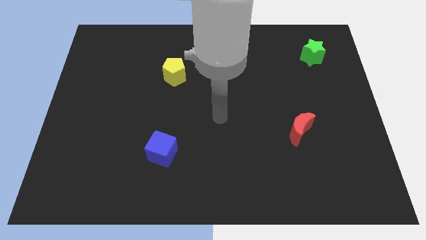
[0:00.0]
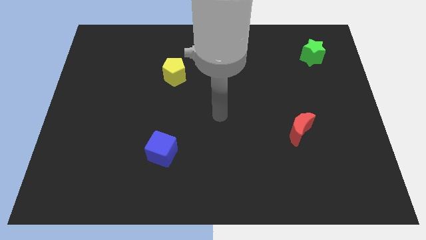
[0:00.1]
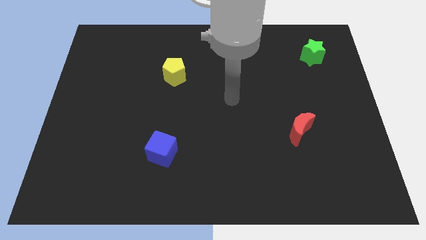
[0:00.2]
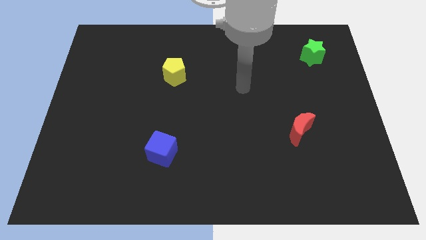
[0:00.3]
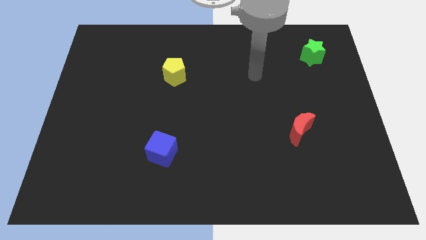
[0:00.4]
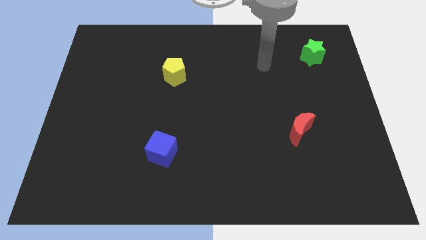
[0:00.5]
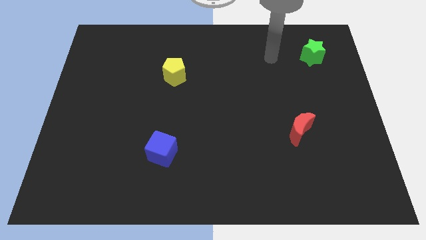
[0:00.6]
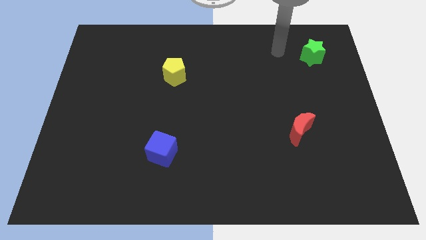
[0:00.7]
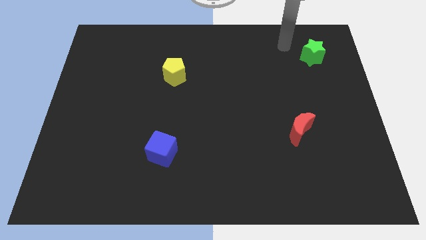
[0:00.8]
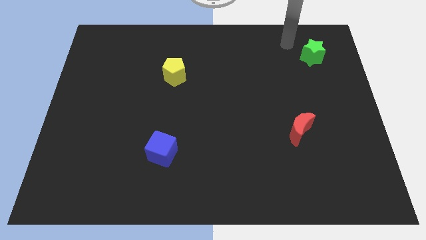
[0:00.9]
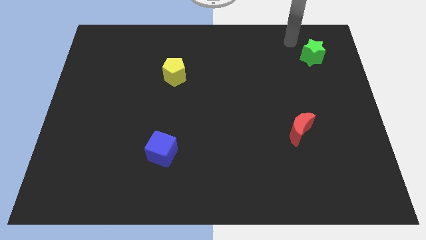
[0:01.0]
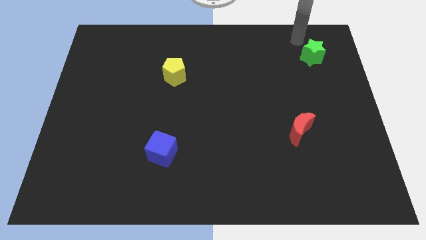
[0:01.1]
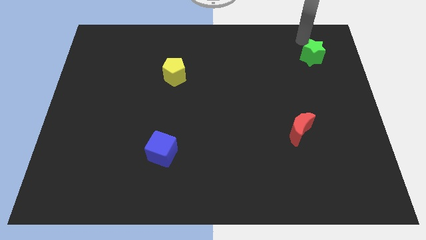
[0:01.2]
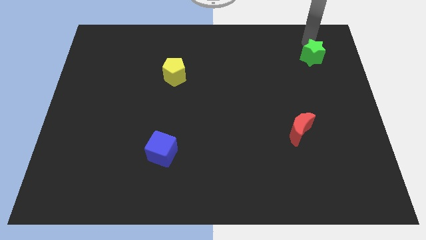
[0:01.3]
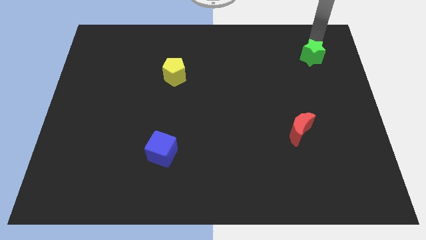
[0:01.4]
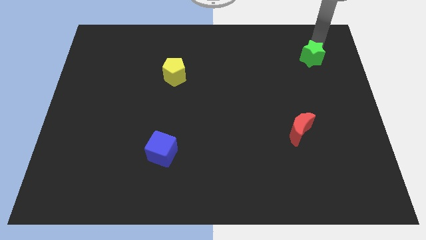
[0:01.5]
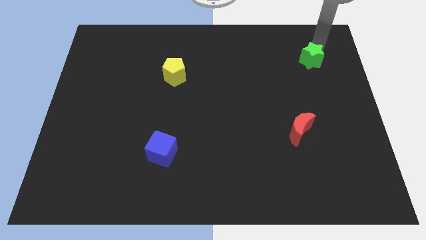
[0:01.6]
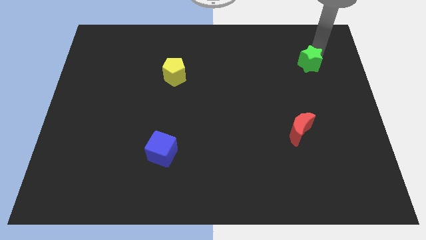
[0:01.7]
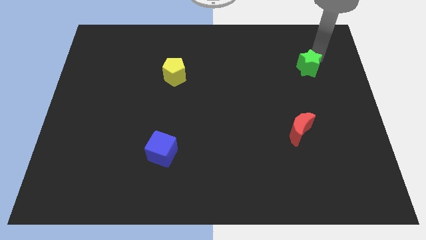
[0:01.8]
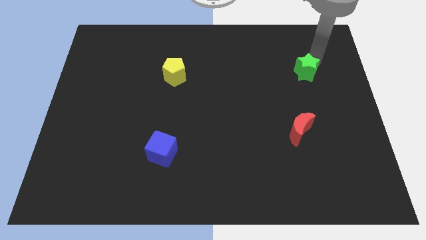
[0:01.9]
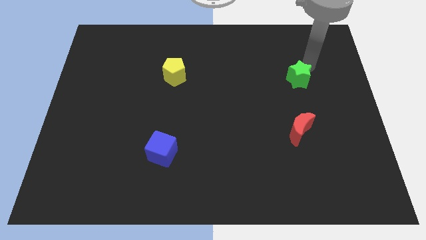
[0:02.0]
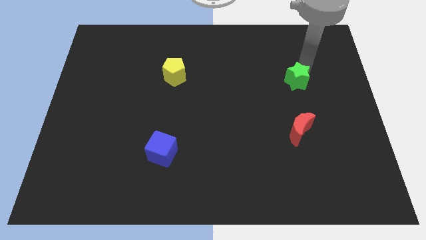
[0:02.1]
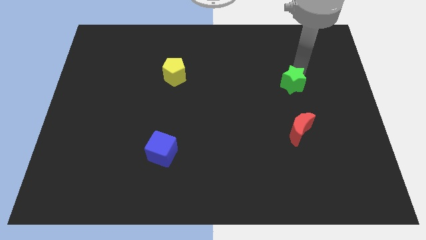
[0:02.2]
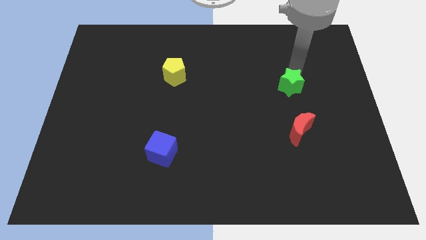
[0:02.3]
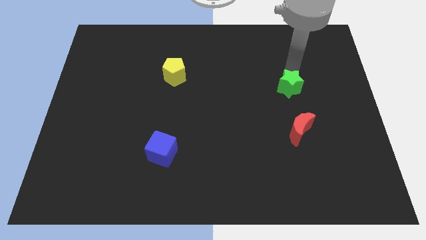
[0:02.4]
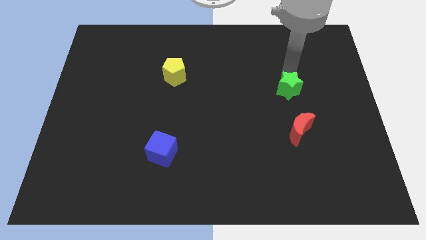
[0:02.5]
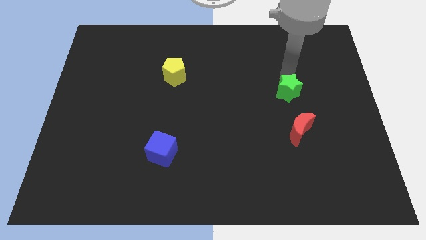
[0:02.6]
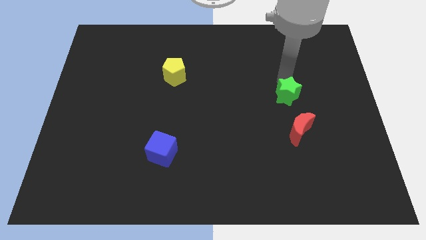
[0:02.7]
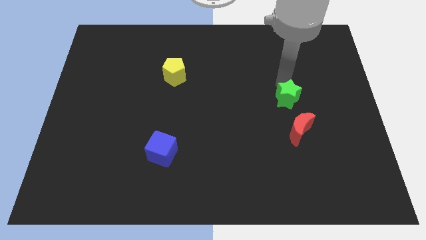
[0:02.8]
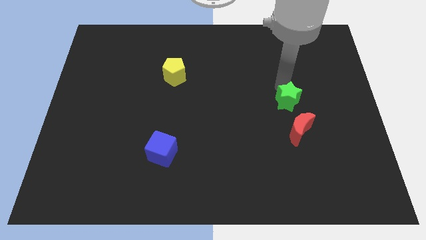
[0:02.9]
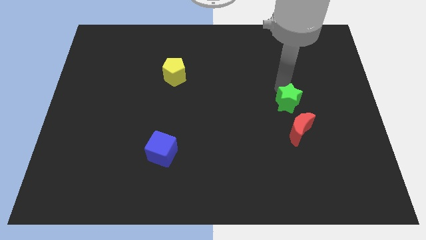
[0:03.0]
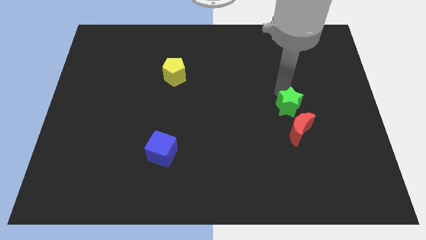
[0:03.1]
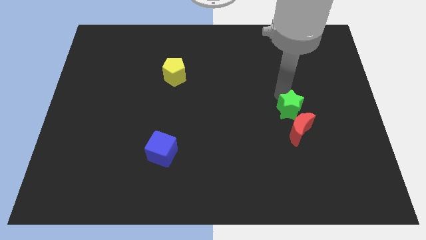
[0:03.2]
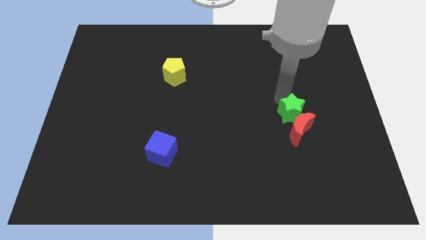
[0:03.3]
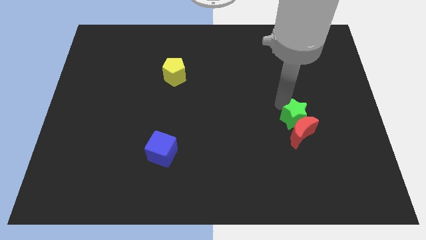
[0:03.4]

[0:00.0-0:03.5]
move the green star close to the red block

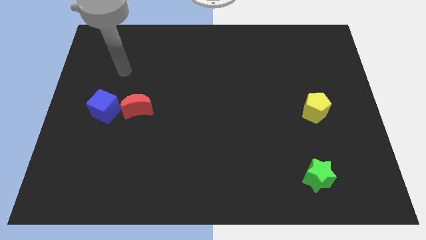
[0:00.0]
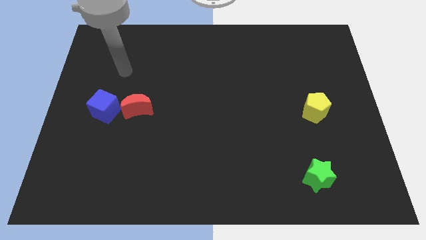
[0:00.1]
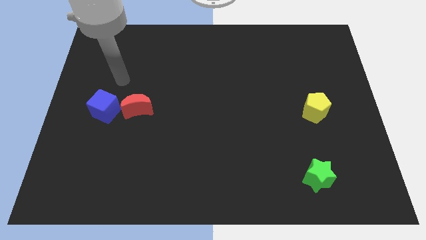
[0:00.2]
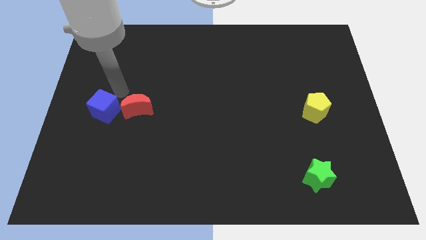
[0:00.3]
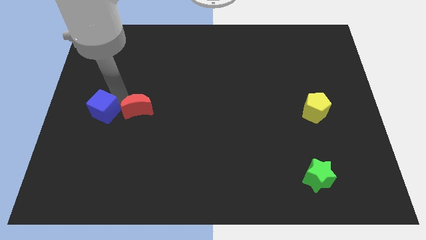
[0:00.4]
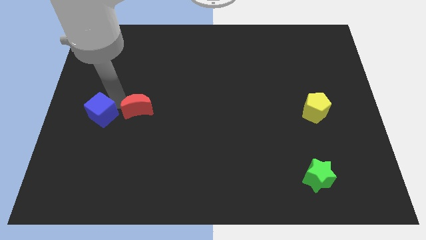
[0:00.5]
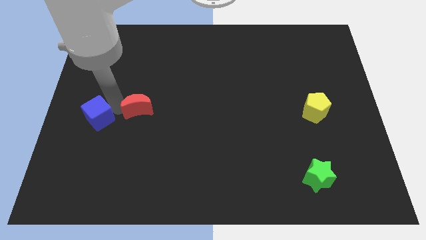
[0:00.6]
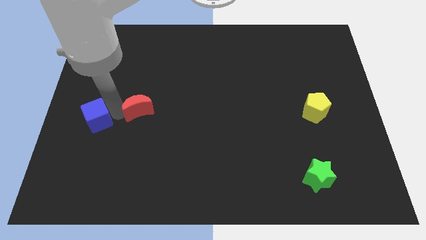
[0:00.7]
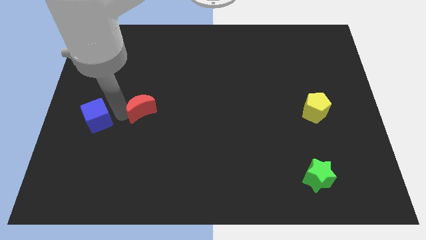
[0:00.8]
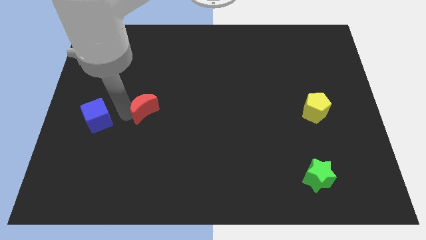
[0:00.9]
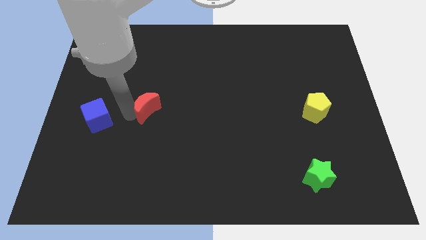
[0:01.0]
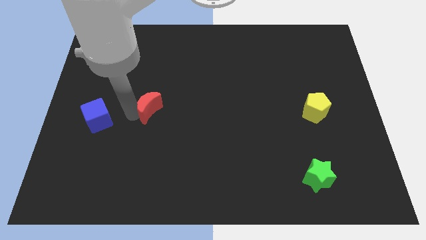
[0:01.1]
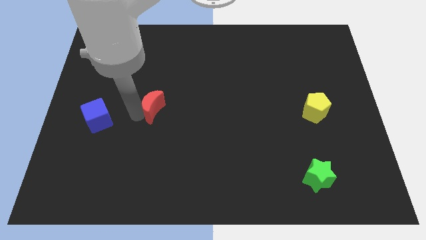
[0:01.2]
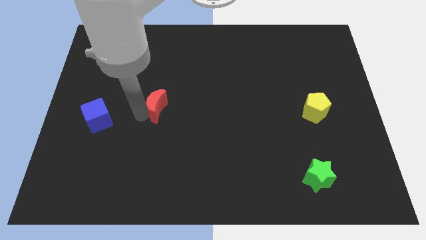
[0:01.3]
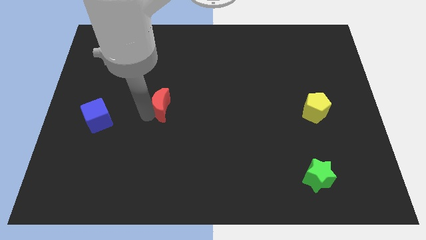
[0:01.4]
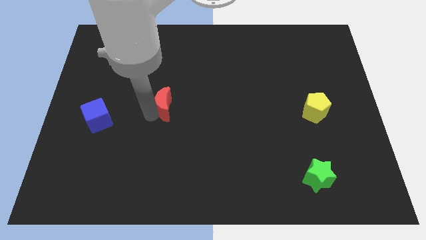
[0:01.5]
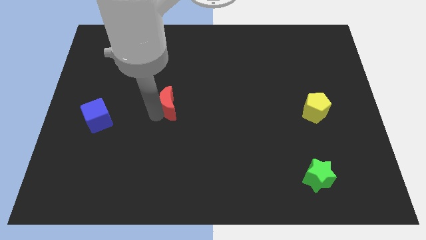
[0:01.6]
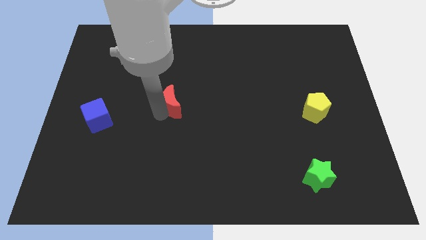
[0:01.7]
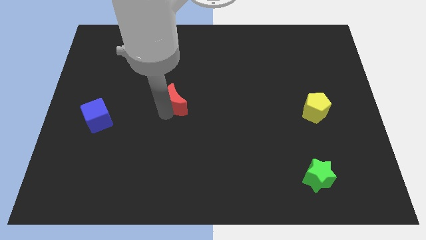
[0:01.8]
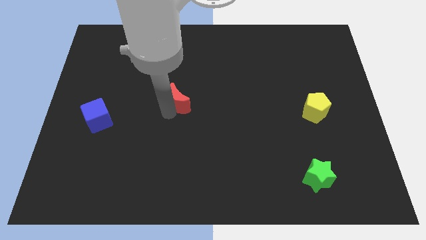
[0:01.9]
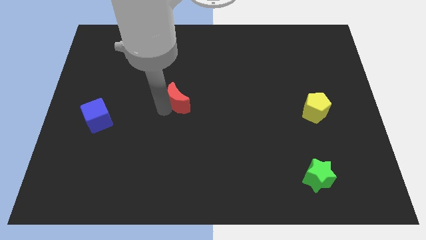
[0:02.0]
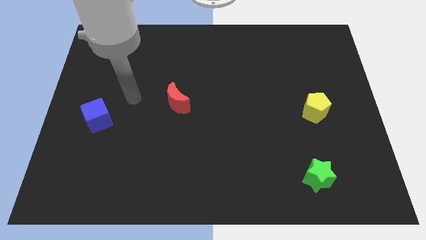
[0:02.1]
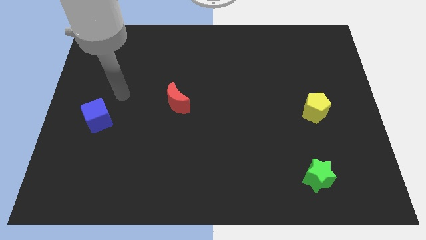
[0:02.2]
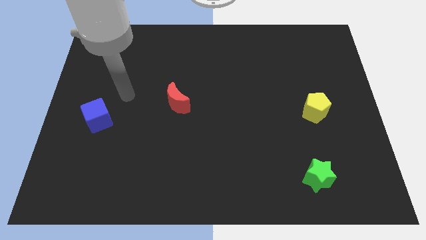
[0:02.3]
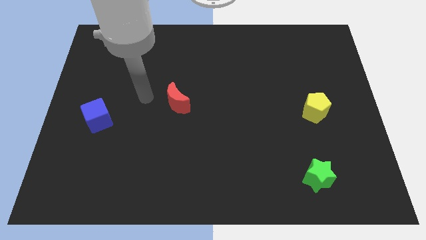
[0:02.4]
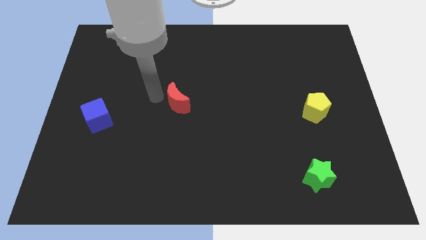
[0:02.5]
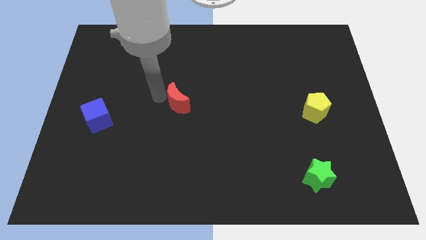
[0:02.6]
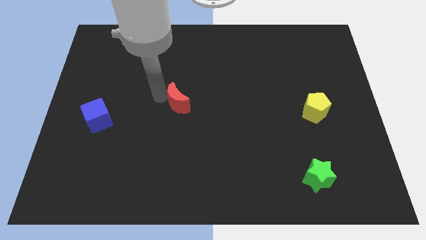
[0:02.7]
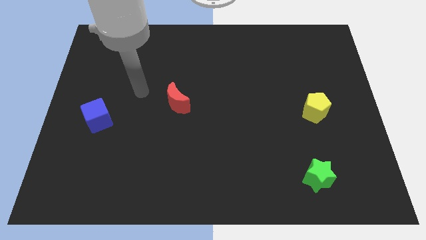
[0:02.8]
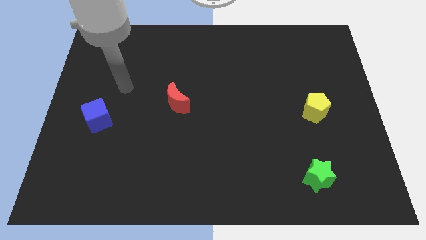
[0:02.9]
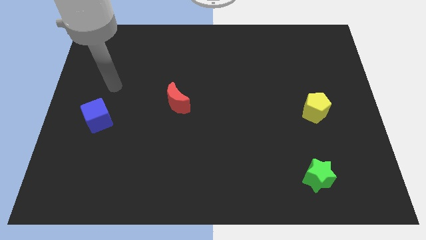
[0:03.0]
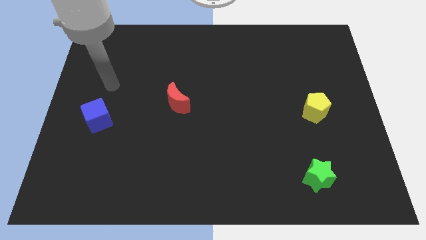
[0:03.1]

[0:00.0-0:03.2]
push the red block to the yellow block

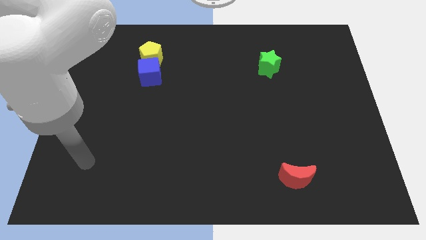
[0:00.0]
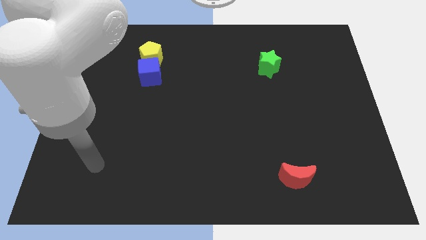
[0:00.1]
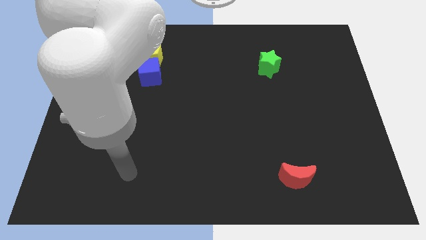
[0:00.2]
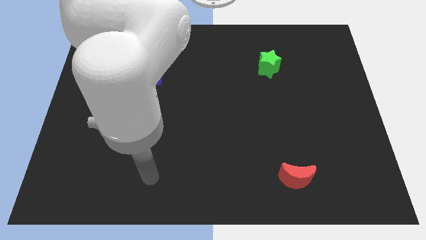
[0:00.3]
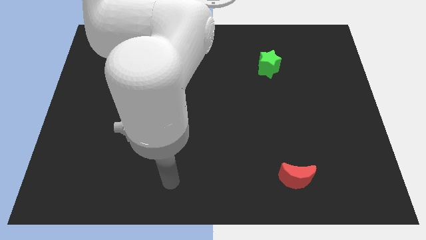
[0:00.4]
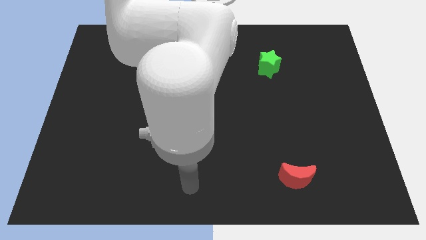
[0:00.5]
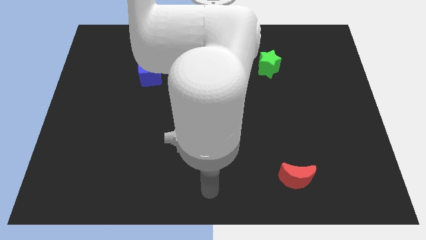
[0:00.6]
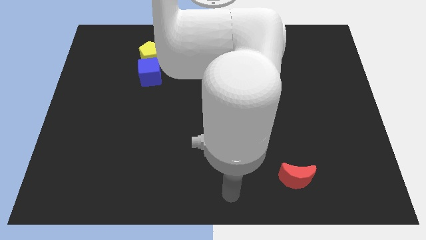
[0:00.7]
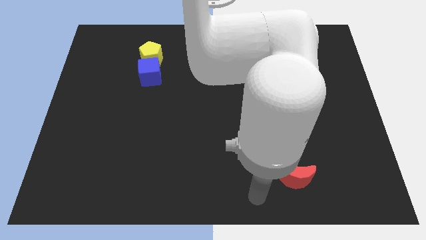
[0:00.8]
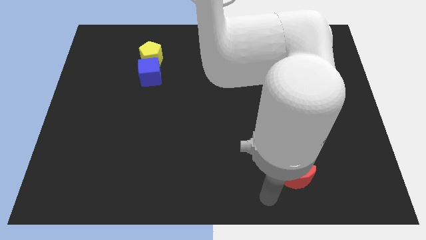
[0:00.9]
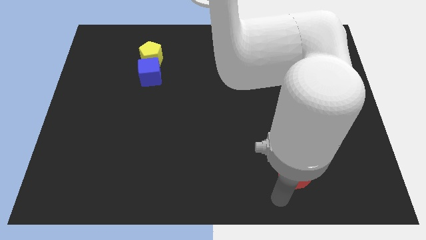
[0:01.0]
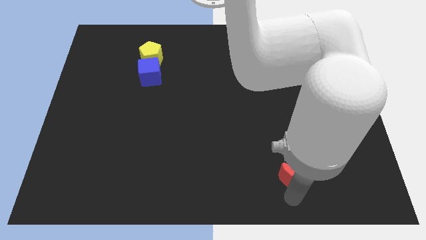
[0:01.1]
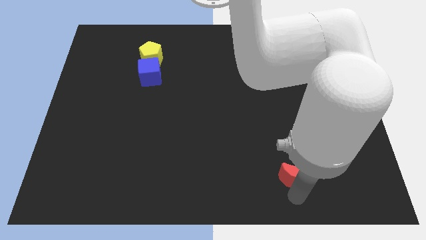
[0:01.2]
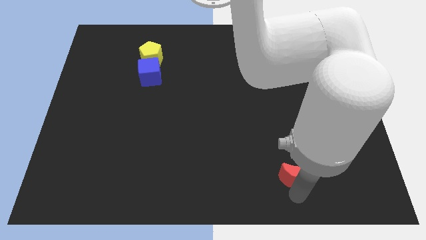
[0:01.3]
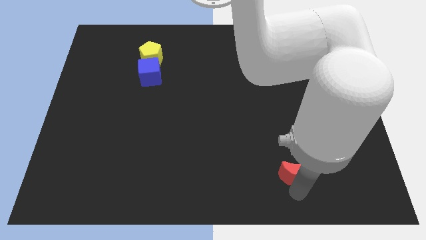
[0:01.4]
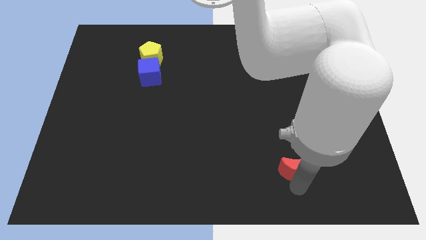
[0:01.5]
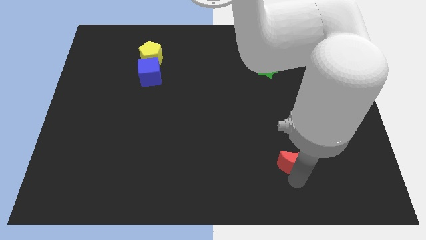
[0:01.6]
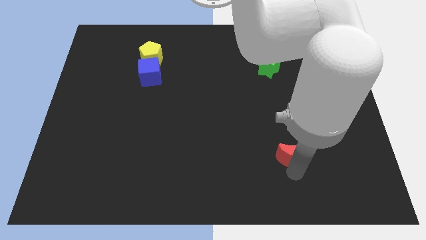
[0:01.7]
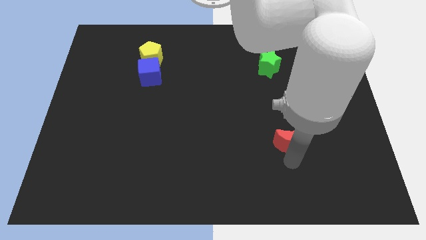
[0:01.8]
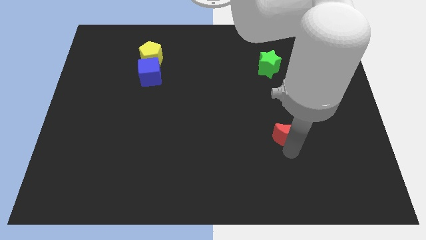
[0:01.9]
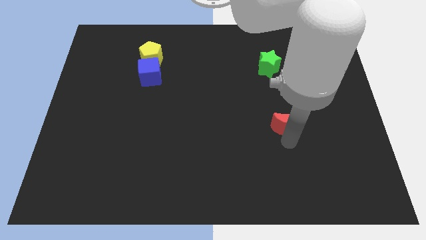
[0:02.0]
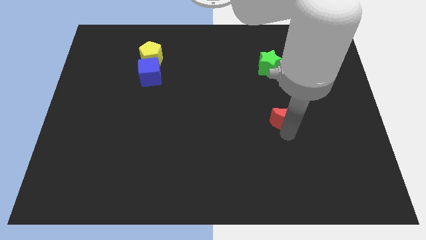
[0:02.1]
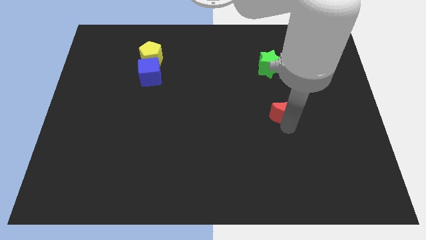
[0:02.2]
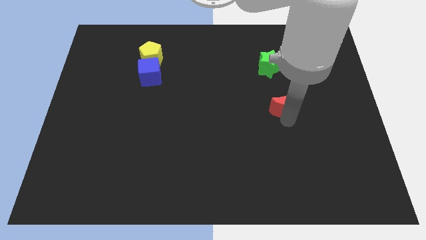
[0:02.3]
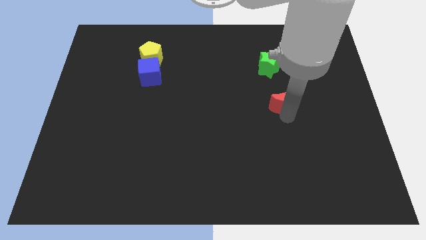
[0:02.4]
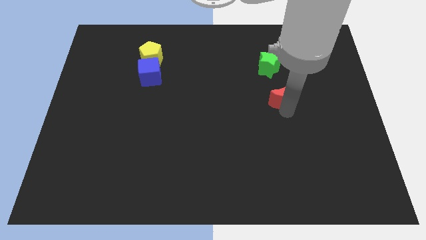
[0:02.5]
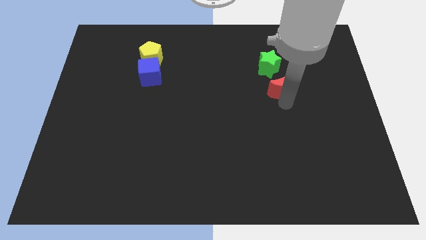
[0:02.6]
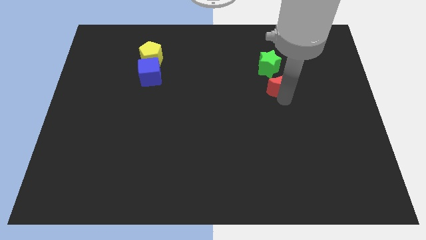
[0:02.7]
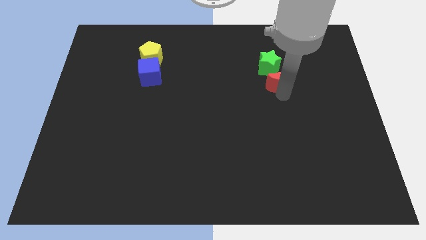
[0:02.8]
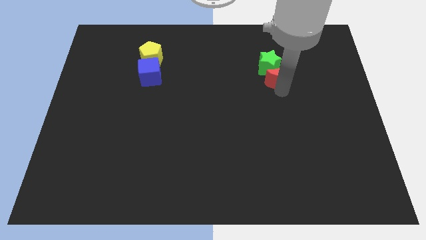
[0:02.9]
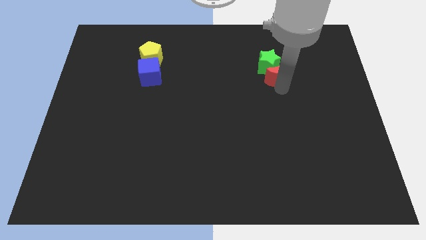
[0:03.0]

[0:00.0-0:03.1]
put the red block next to the green star
